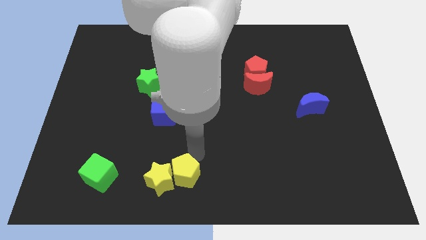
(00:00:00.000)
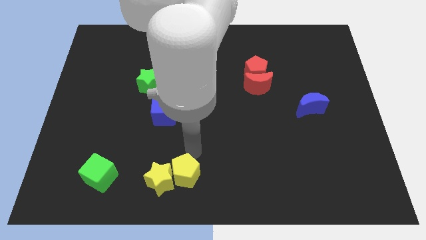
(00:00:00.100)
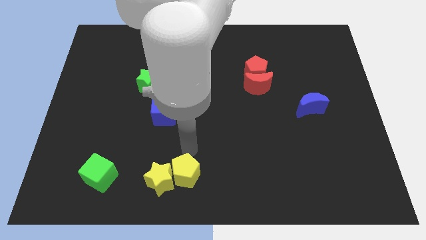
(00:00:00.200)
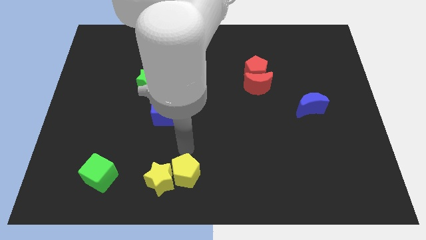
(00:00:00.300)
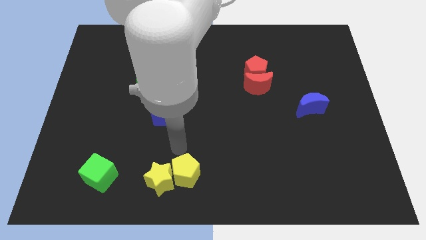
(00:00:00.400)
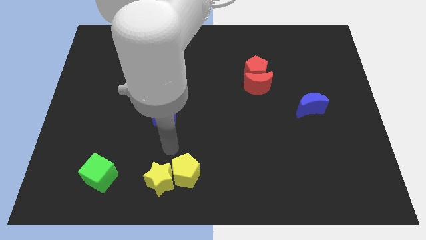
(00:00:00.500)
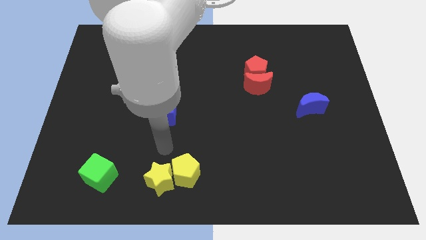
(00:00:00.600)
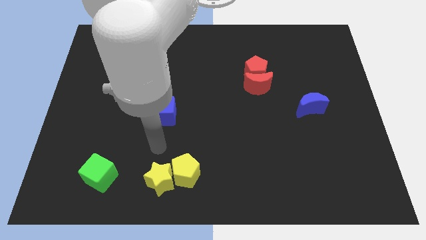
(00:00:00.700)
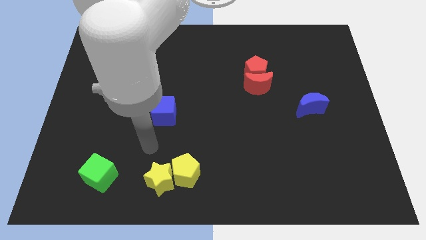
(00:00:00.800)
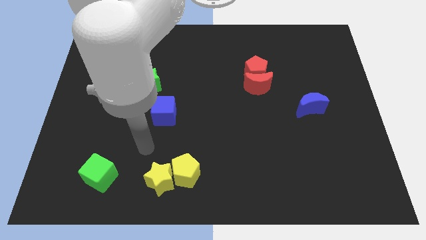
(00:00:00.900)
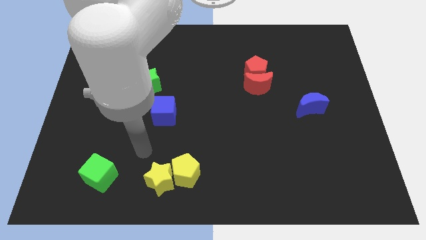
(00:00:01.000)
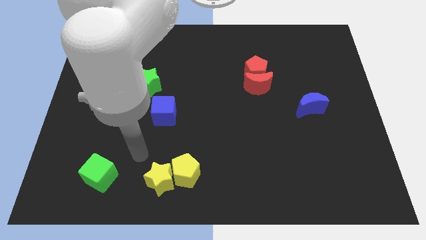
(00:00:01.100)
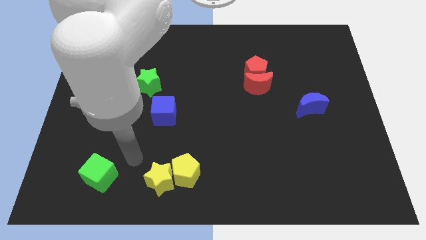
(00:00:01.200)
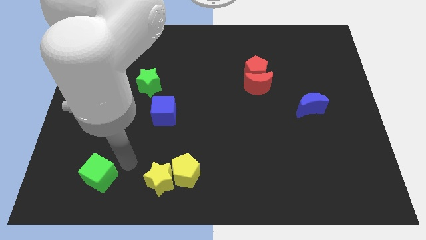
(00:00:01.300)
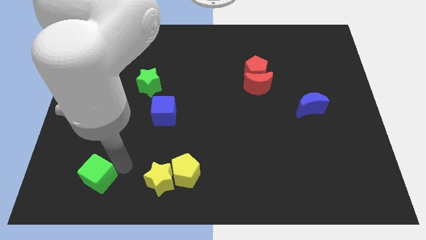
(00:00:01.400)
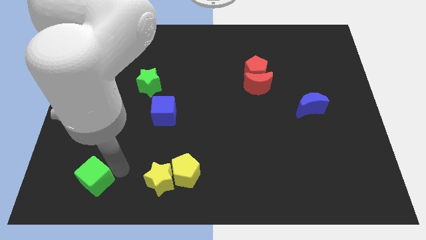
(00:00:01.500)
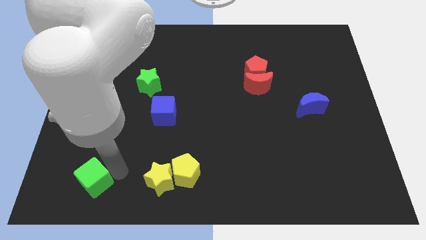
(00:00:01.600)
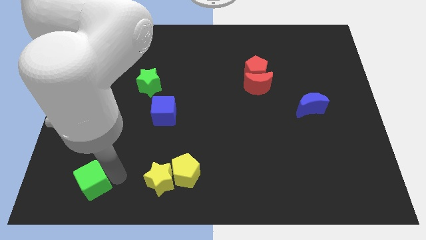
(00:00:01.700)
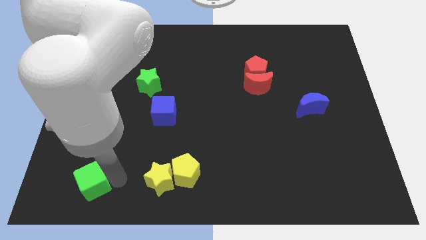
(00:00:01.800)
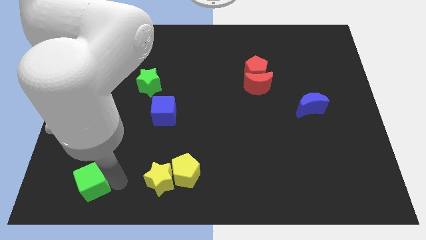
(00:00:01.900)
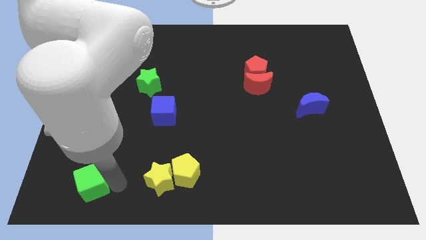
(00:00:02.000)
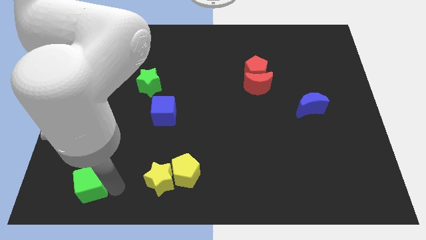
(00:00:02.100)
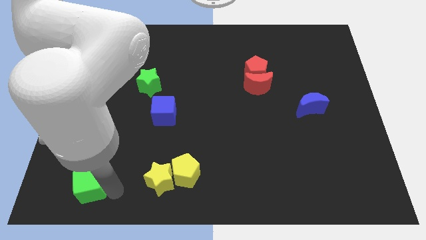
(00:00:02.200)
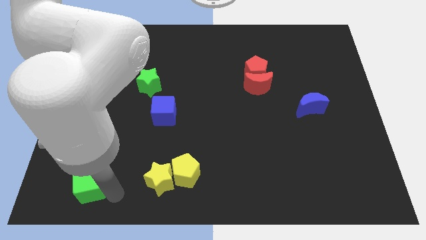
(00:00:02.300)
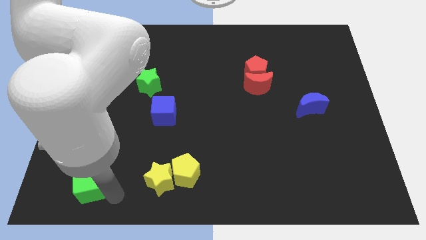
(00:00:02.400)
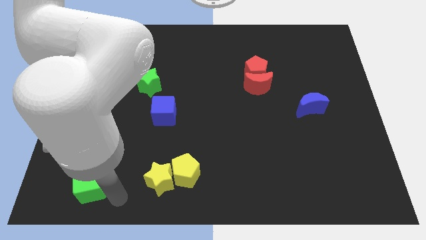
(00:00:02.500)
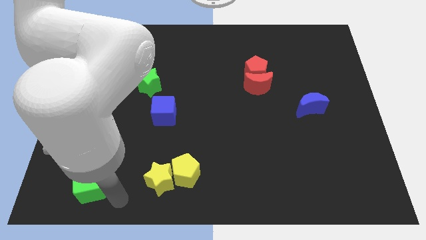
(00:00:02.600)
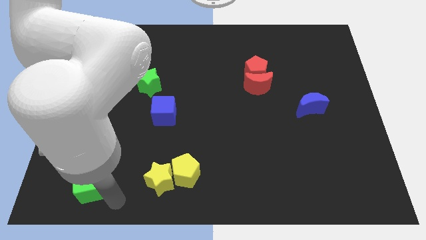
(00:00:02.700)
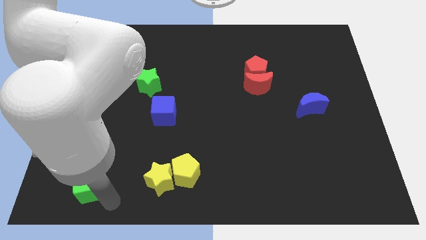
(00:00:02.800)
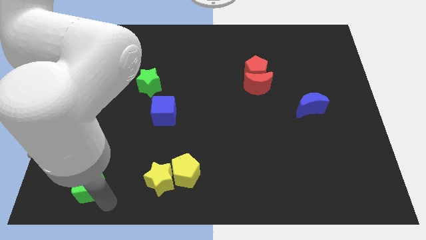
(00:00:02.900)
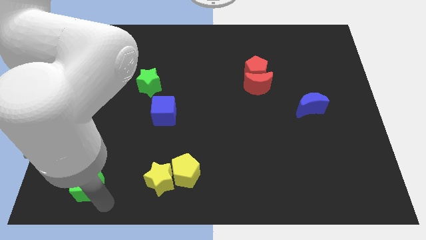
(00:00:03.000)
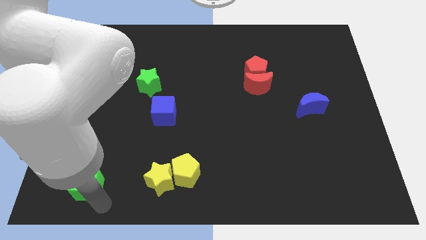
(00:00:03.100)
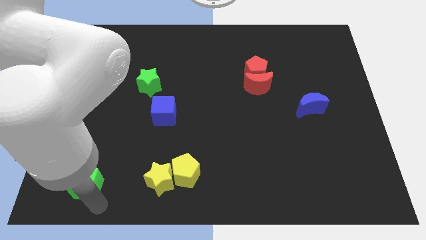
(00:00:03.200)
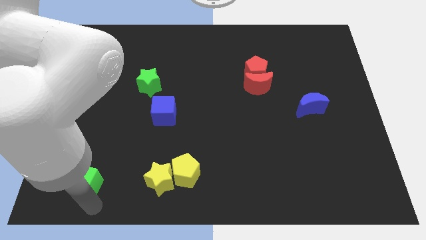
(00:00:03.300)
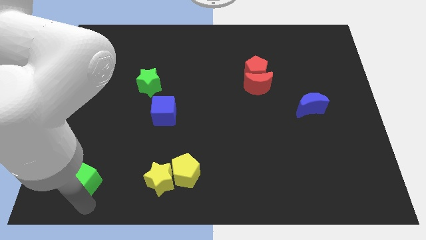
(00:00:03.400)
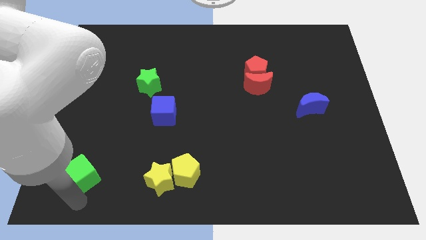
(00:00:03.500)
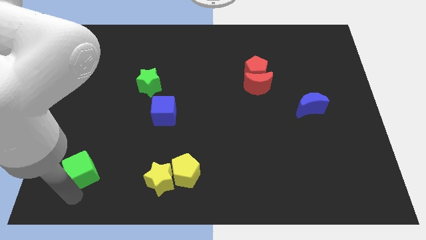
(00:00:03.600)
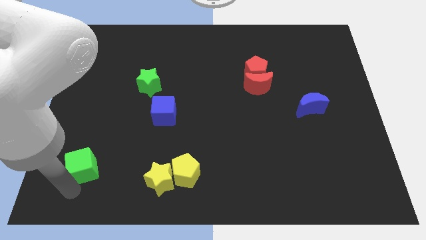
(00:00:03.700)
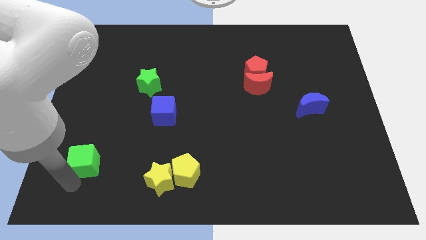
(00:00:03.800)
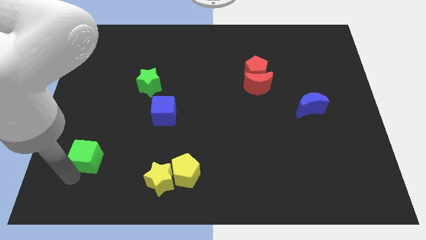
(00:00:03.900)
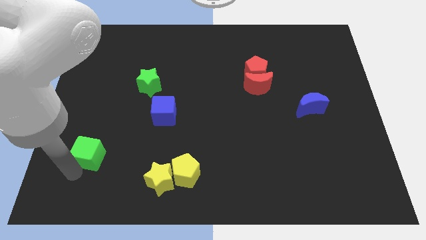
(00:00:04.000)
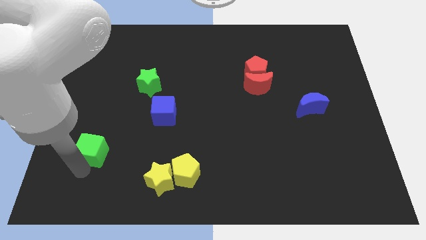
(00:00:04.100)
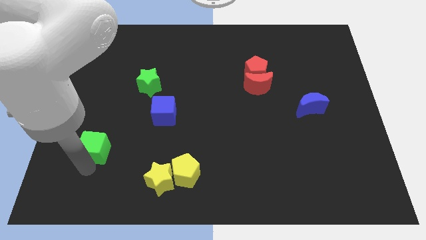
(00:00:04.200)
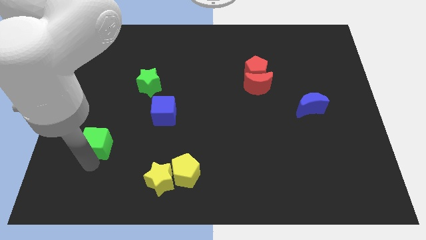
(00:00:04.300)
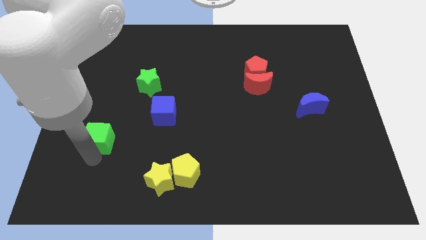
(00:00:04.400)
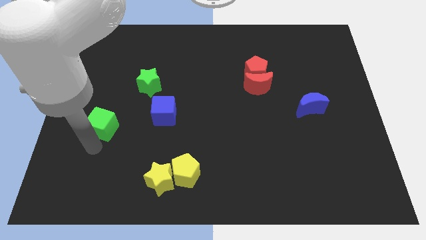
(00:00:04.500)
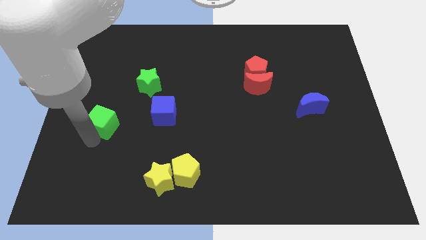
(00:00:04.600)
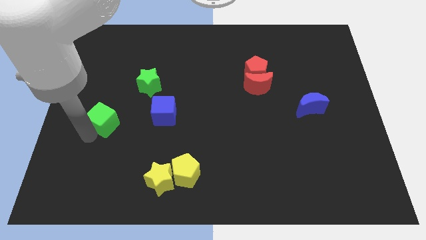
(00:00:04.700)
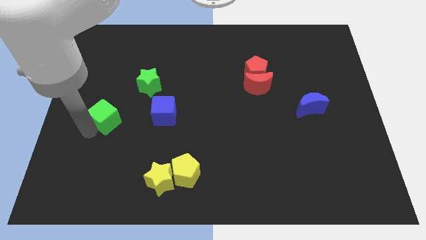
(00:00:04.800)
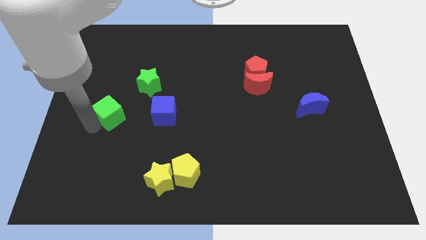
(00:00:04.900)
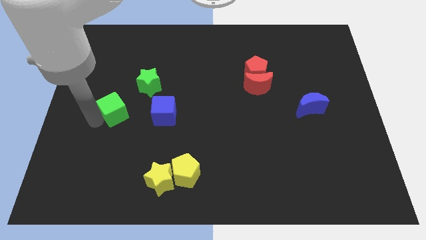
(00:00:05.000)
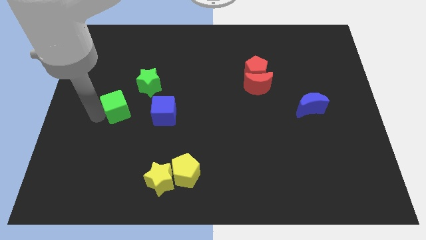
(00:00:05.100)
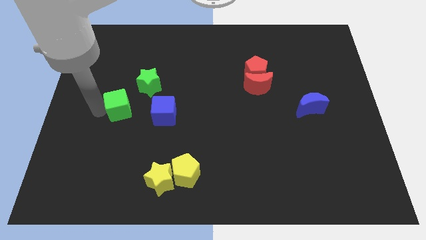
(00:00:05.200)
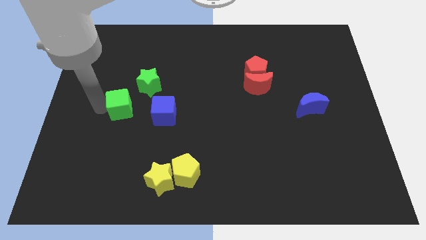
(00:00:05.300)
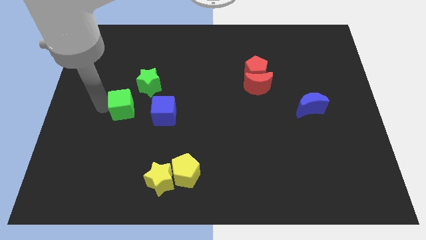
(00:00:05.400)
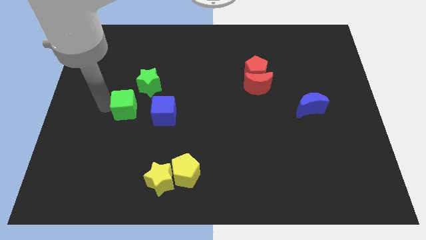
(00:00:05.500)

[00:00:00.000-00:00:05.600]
move the green cube left to the blue cube

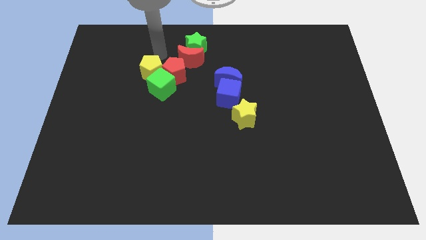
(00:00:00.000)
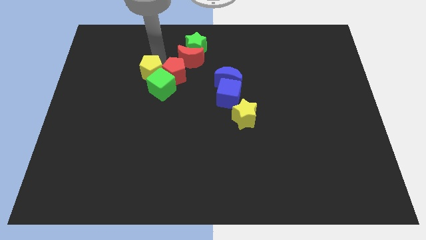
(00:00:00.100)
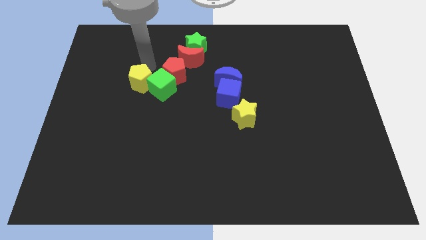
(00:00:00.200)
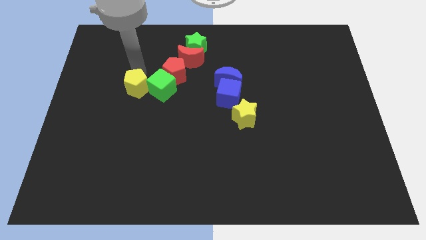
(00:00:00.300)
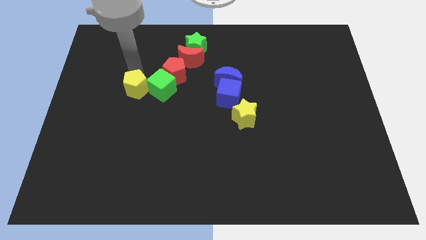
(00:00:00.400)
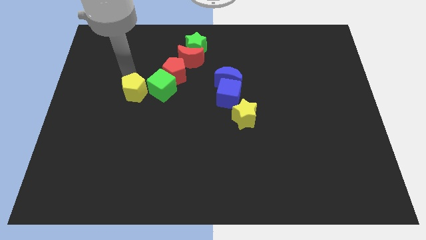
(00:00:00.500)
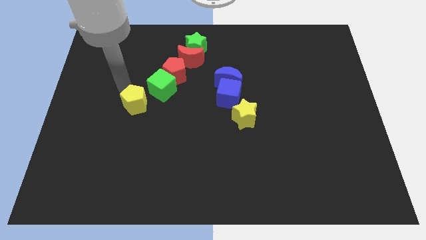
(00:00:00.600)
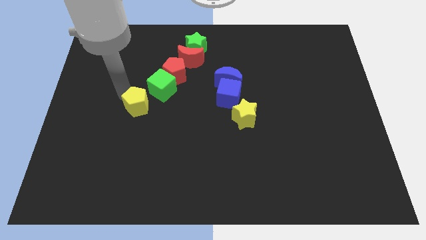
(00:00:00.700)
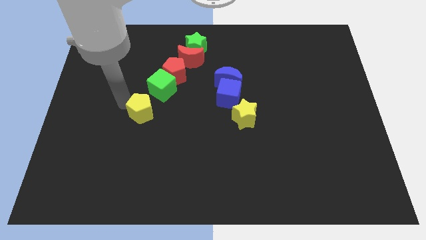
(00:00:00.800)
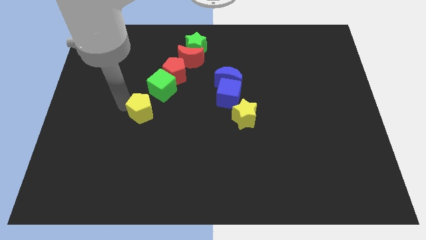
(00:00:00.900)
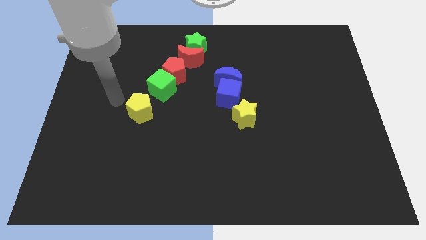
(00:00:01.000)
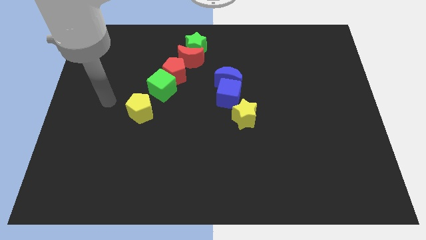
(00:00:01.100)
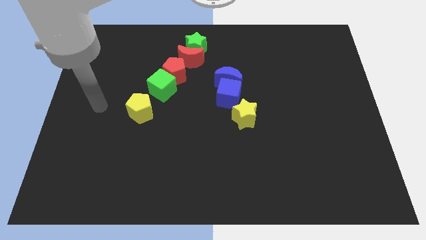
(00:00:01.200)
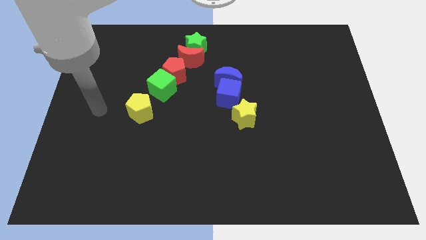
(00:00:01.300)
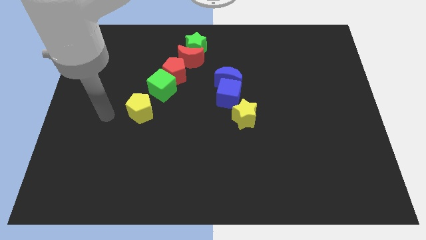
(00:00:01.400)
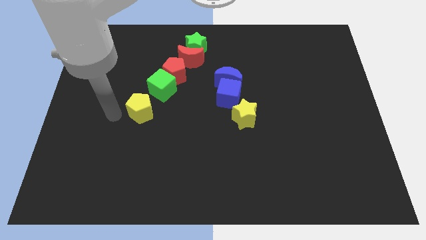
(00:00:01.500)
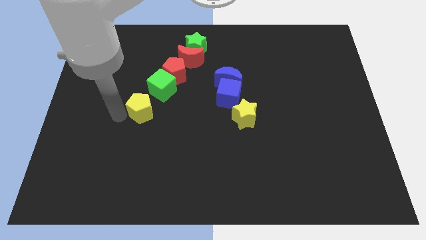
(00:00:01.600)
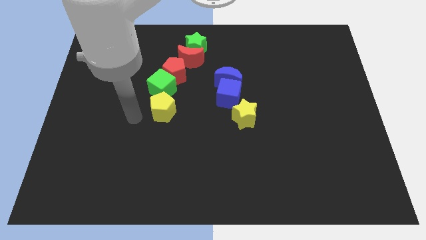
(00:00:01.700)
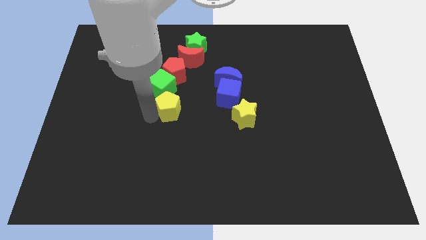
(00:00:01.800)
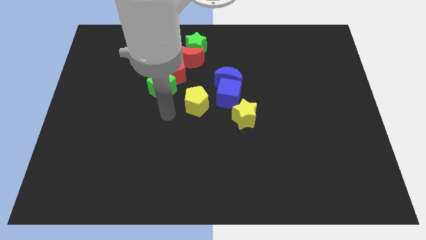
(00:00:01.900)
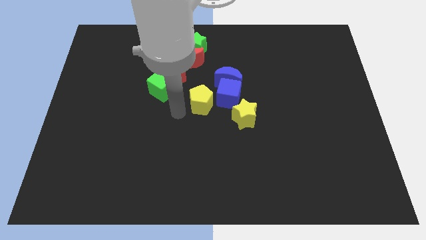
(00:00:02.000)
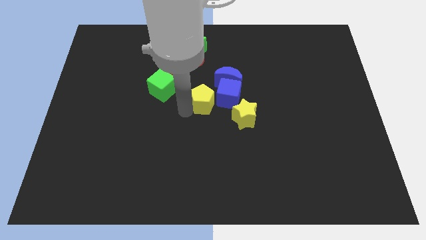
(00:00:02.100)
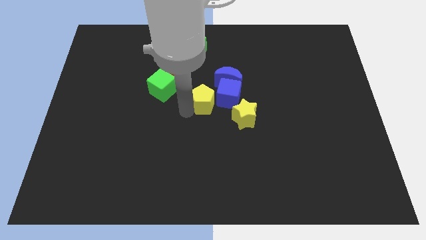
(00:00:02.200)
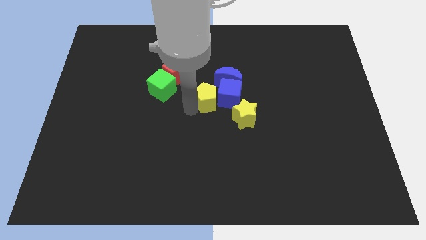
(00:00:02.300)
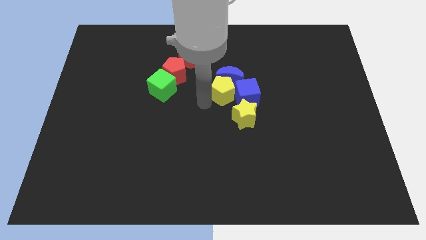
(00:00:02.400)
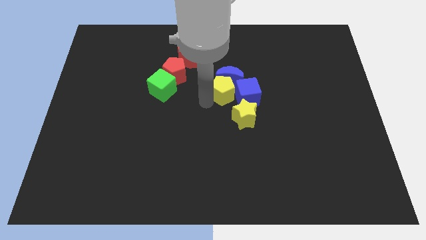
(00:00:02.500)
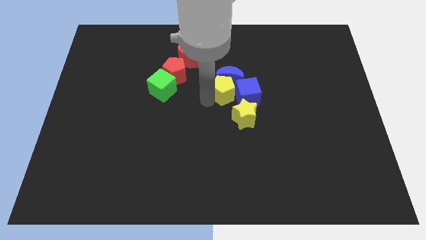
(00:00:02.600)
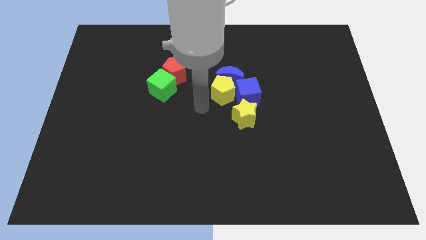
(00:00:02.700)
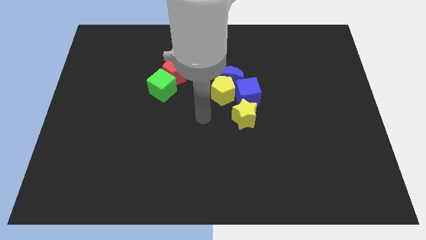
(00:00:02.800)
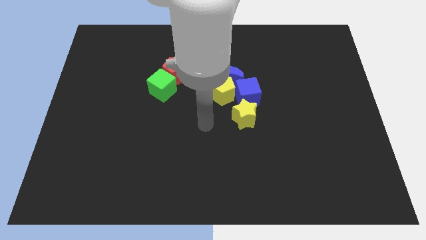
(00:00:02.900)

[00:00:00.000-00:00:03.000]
move the yellow pentagon into the blue crescent

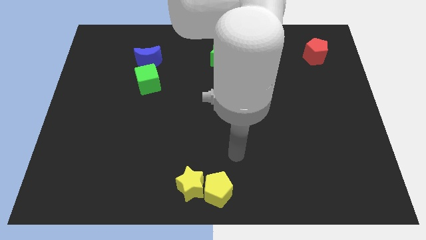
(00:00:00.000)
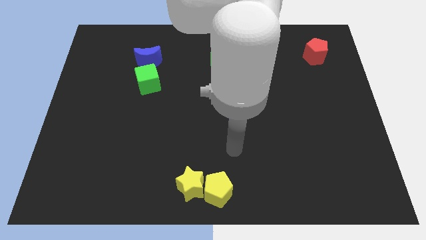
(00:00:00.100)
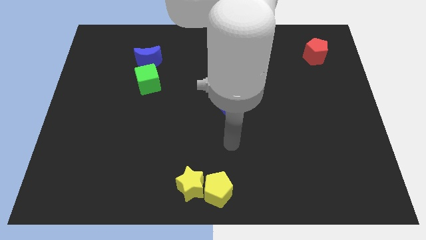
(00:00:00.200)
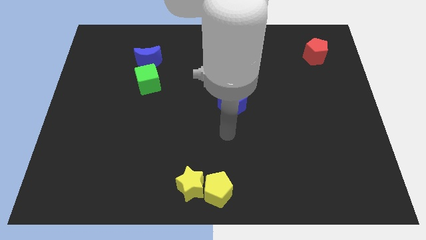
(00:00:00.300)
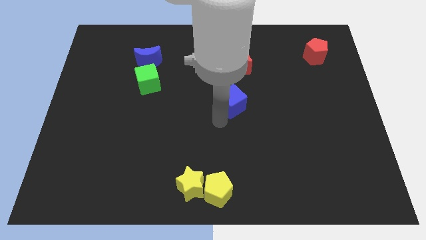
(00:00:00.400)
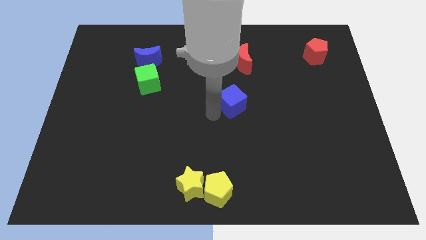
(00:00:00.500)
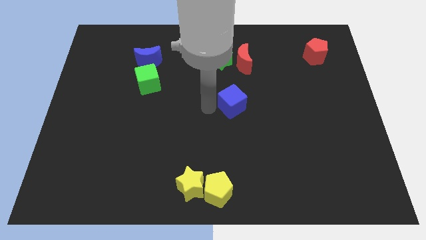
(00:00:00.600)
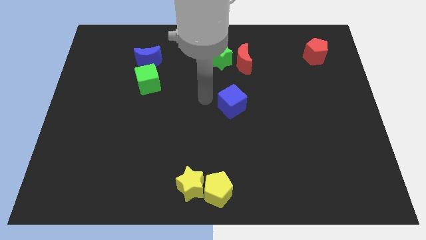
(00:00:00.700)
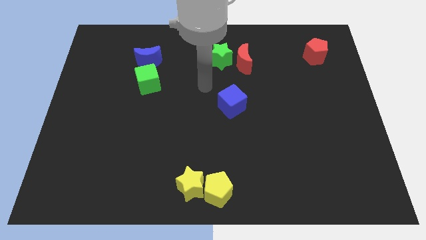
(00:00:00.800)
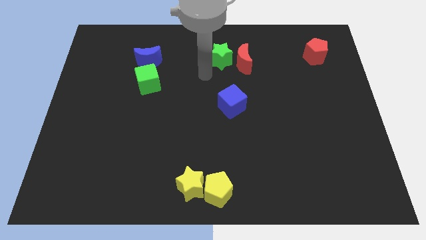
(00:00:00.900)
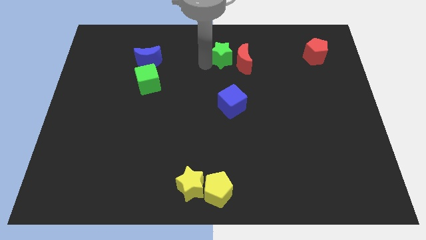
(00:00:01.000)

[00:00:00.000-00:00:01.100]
move your arm below the green star
